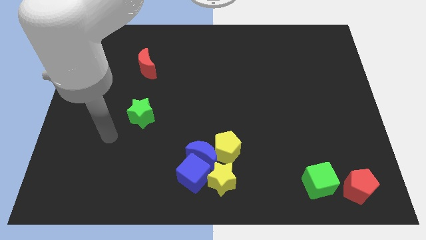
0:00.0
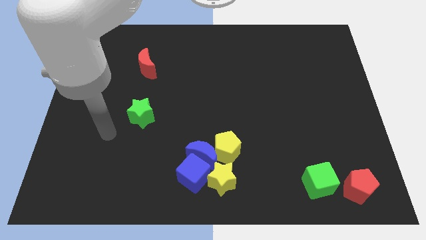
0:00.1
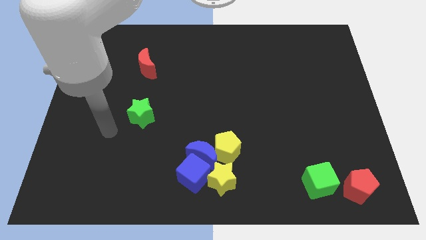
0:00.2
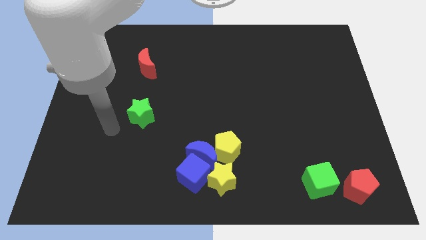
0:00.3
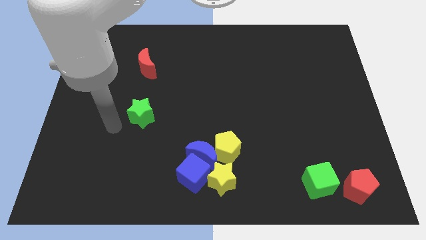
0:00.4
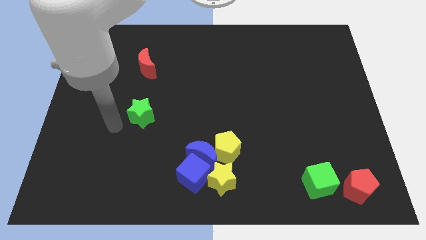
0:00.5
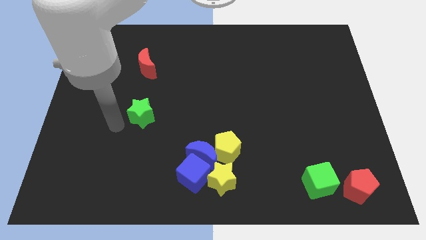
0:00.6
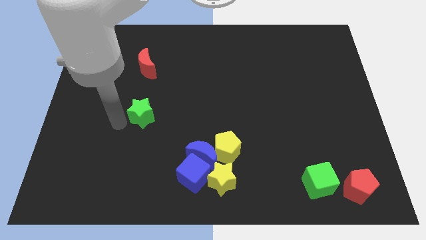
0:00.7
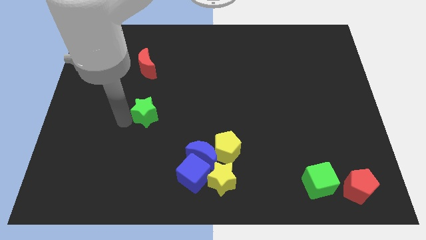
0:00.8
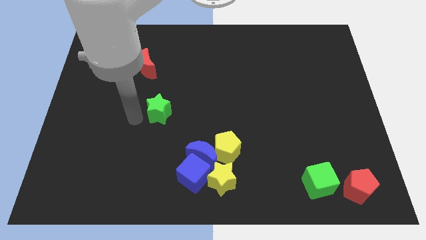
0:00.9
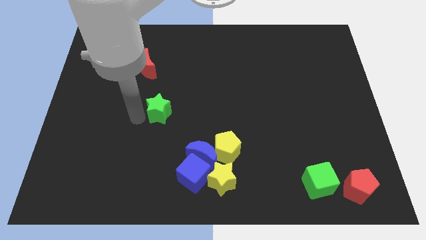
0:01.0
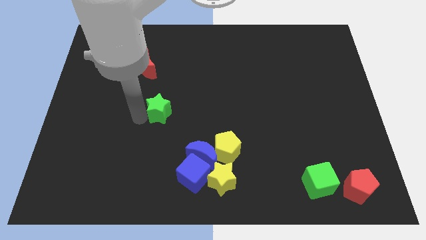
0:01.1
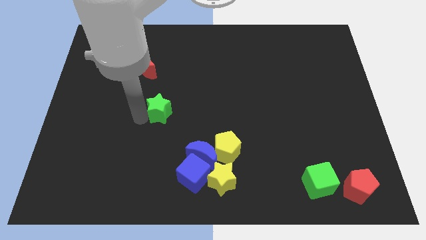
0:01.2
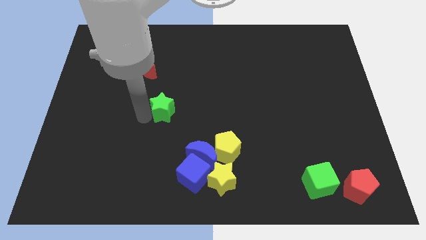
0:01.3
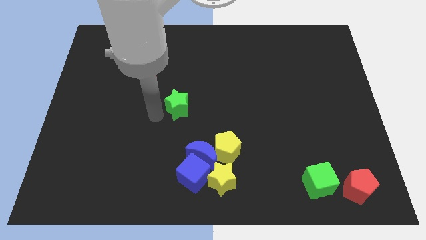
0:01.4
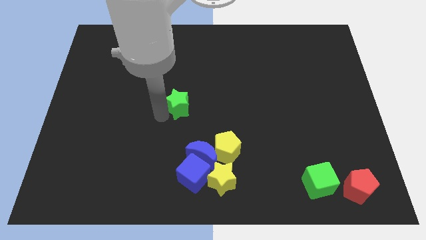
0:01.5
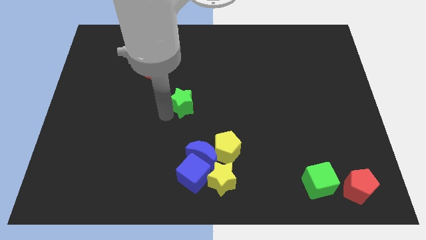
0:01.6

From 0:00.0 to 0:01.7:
push the green star slightly to the right

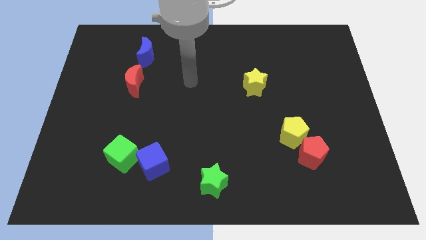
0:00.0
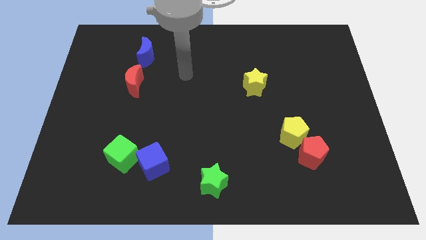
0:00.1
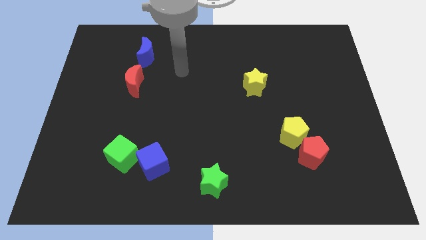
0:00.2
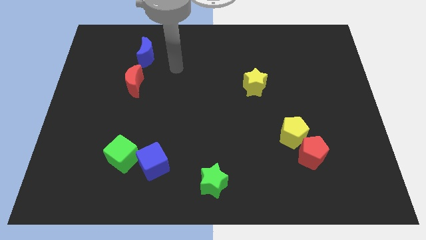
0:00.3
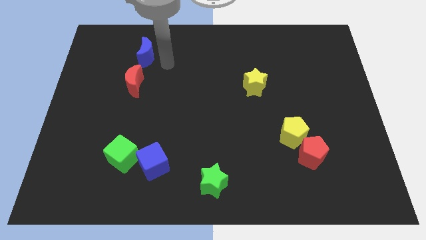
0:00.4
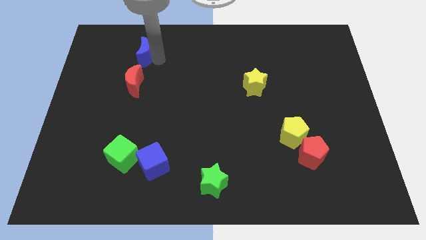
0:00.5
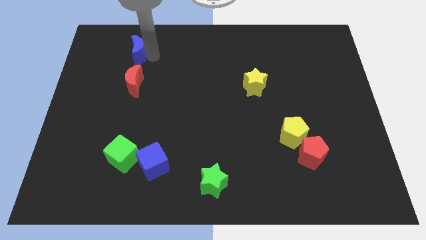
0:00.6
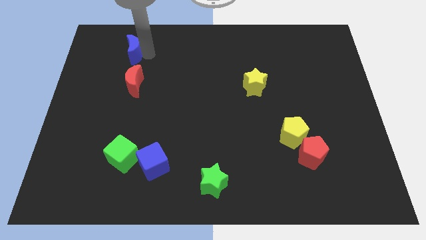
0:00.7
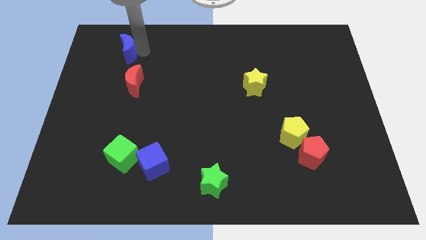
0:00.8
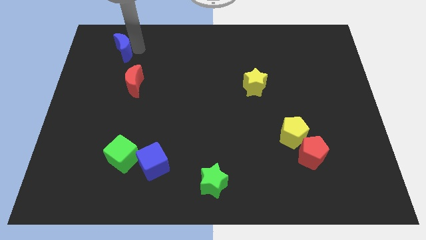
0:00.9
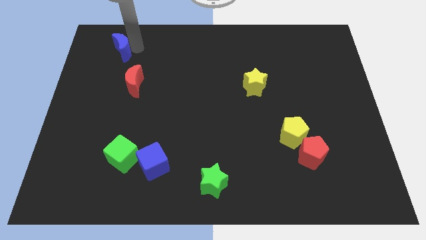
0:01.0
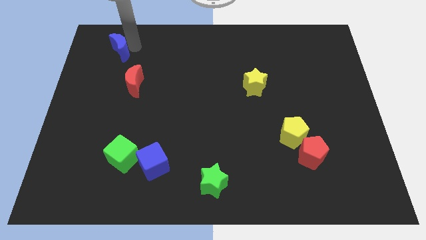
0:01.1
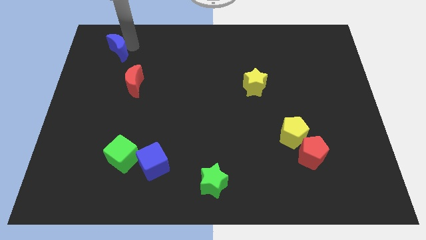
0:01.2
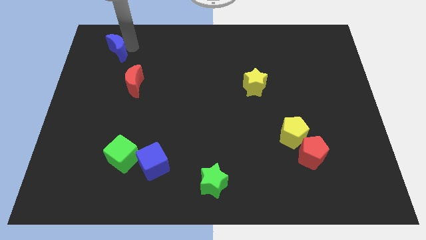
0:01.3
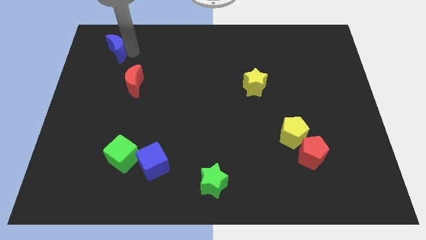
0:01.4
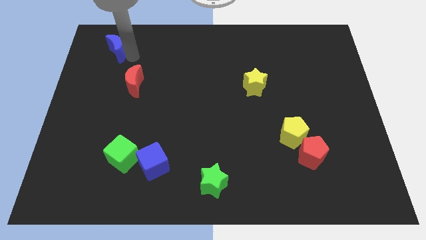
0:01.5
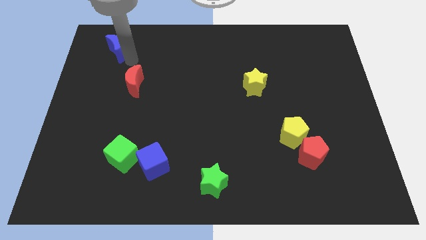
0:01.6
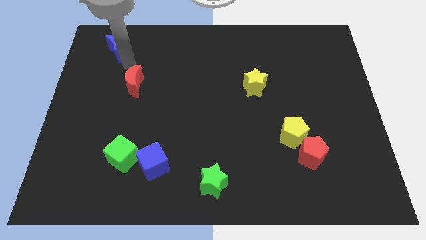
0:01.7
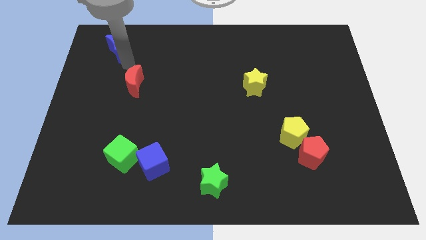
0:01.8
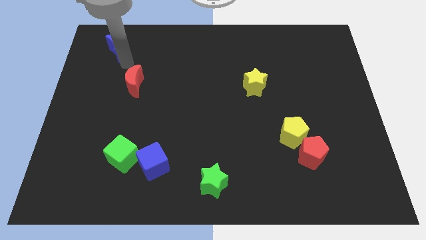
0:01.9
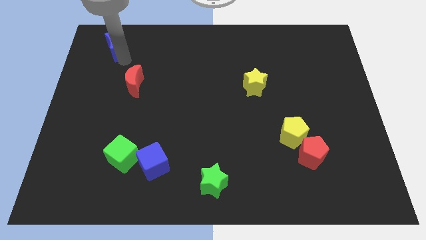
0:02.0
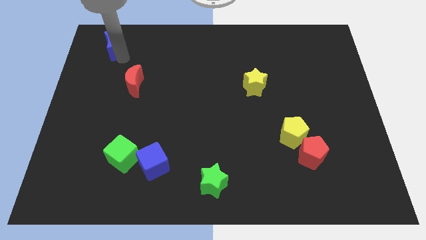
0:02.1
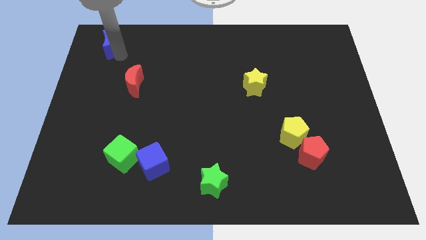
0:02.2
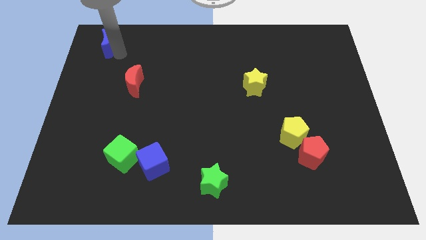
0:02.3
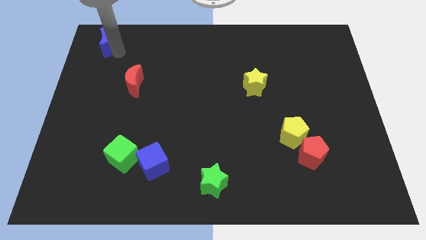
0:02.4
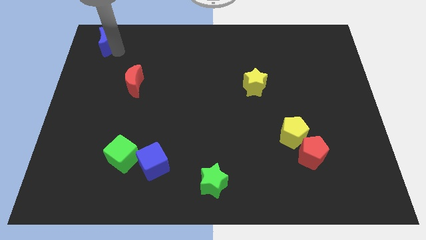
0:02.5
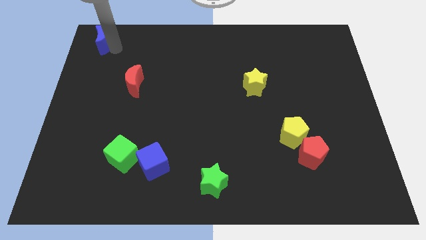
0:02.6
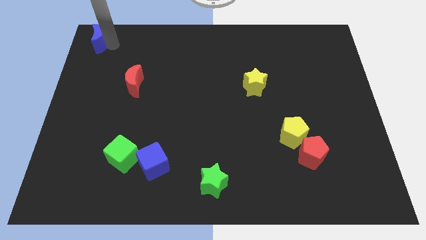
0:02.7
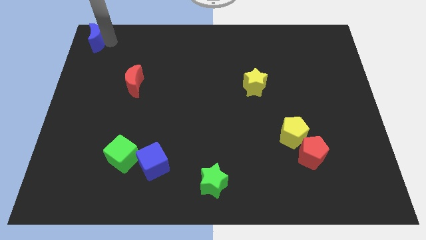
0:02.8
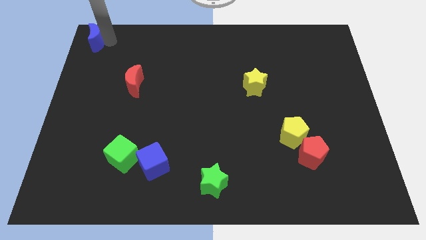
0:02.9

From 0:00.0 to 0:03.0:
move blue cube at top left corner

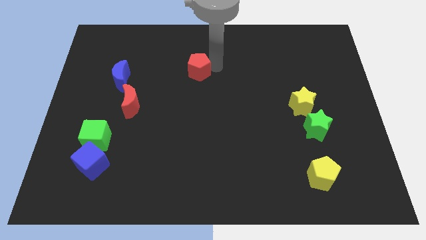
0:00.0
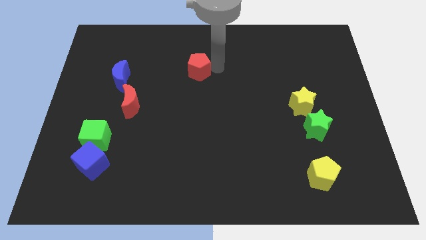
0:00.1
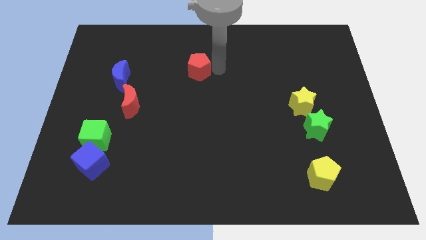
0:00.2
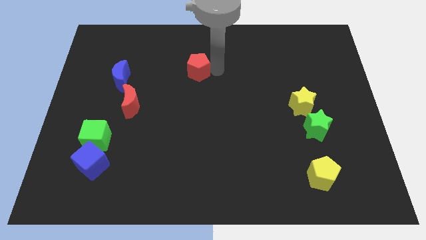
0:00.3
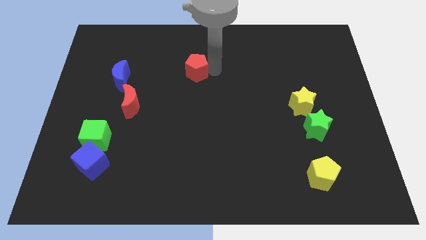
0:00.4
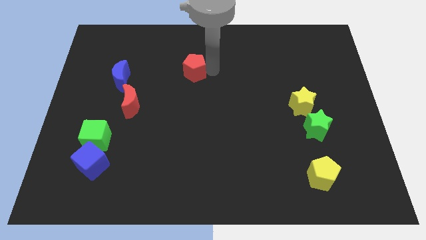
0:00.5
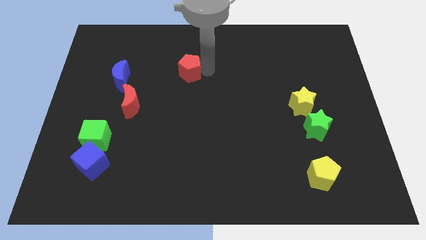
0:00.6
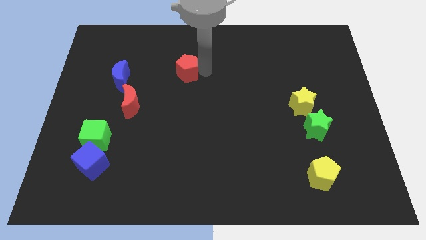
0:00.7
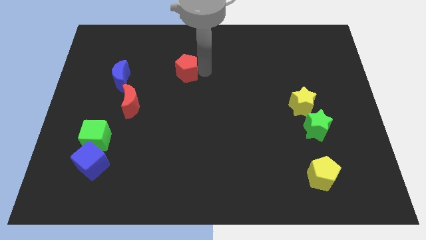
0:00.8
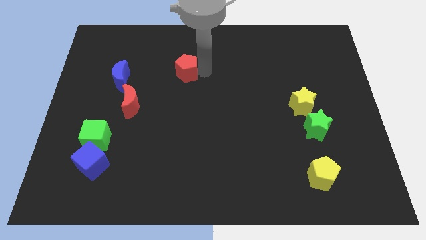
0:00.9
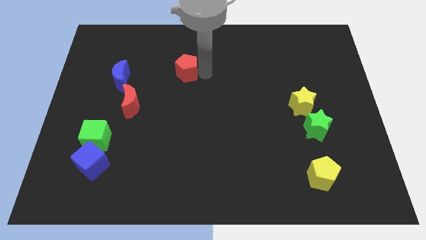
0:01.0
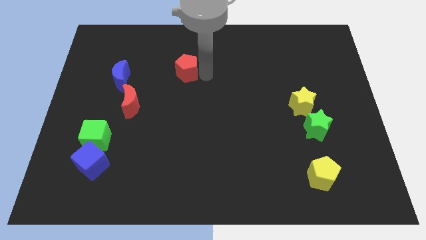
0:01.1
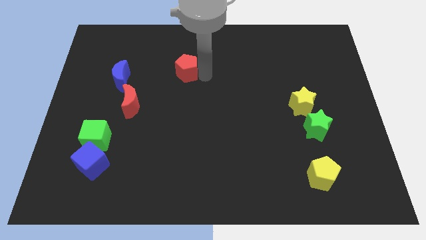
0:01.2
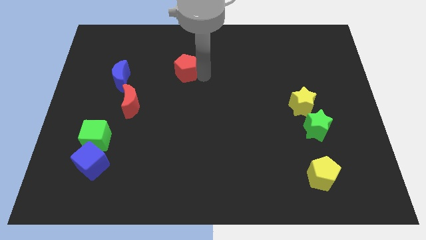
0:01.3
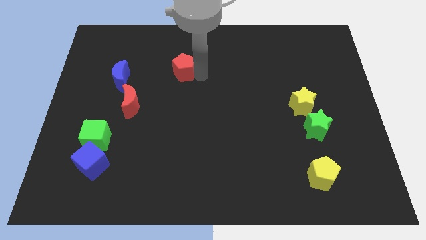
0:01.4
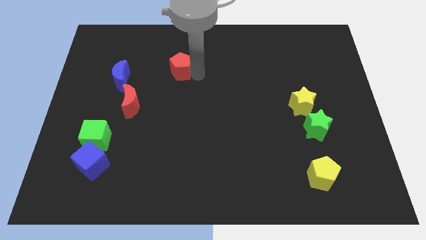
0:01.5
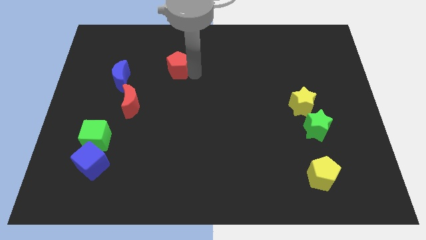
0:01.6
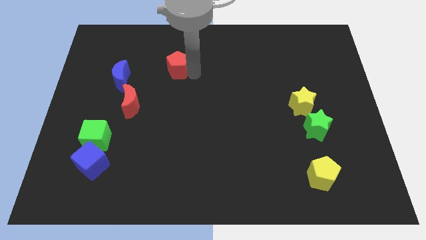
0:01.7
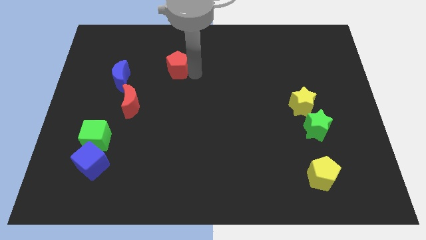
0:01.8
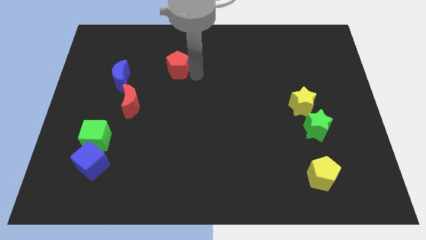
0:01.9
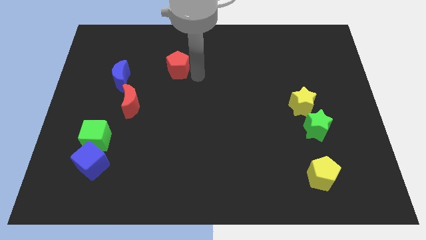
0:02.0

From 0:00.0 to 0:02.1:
push red pentagon to the right of the blue moon

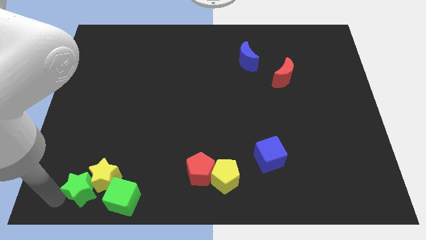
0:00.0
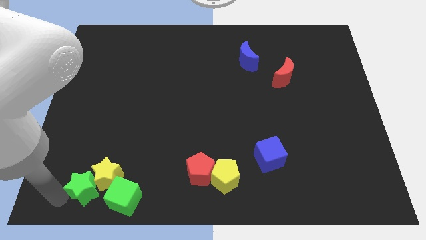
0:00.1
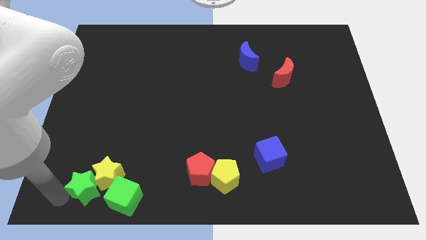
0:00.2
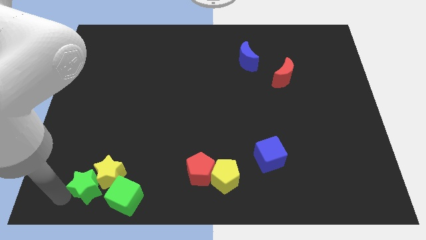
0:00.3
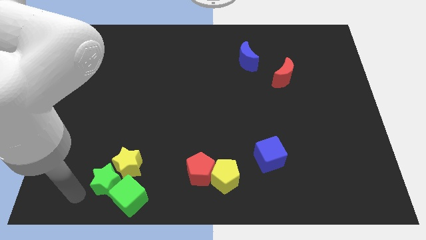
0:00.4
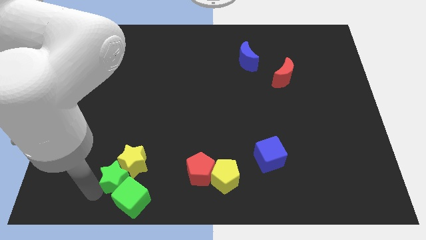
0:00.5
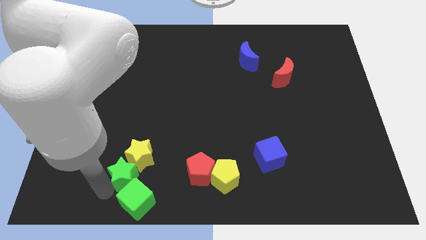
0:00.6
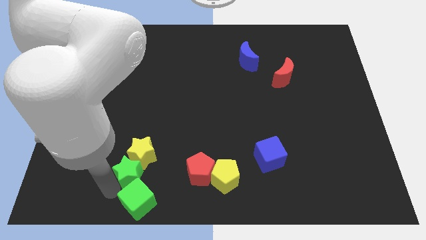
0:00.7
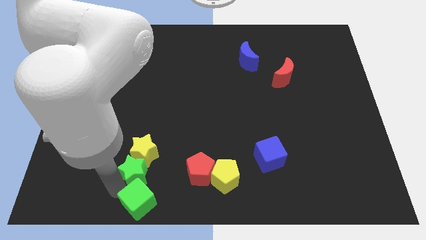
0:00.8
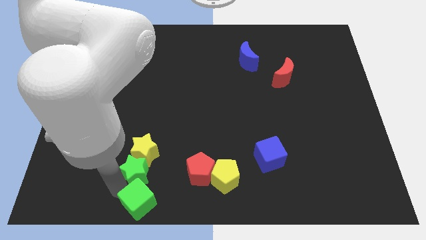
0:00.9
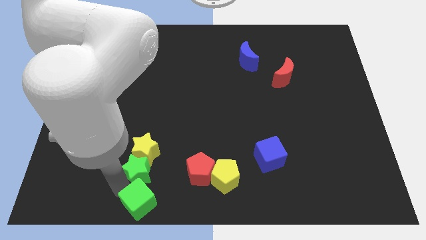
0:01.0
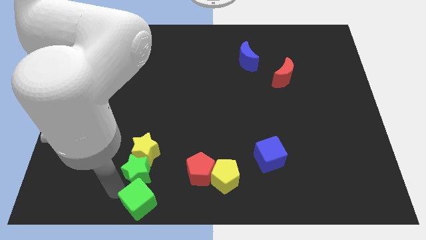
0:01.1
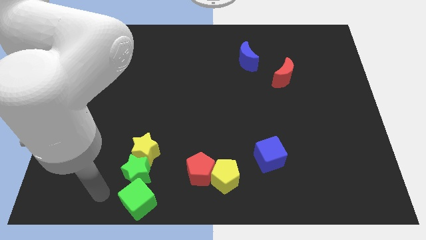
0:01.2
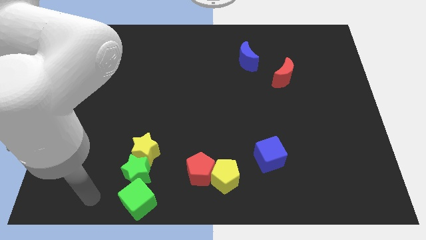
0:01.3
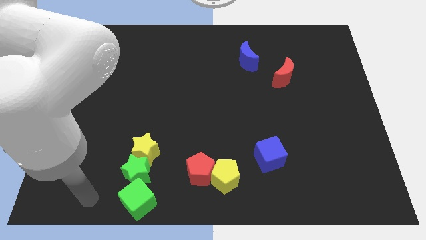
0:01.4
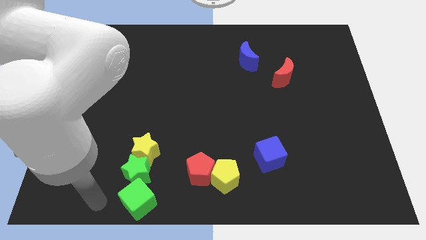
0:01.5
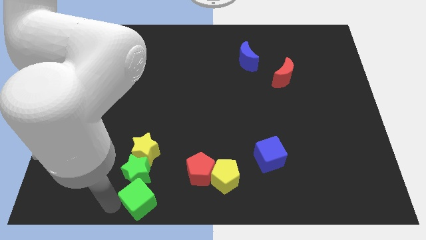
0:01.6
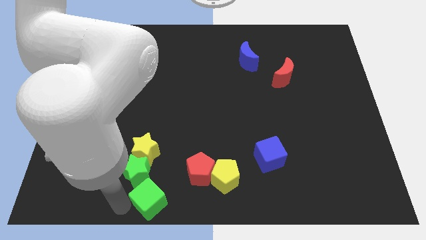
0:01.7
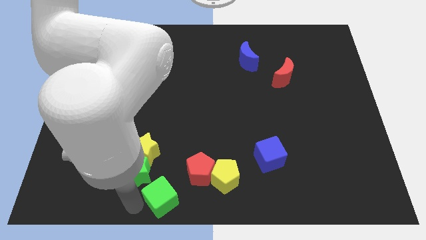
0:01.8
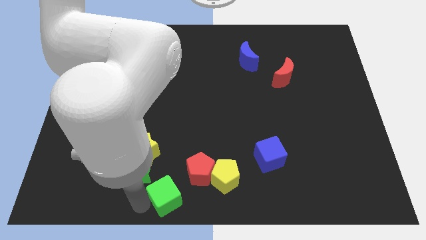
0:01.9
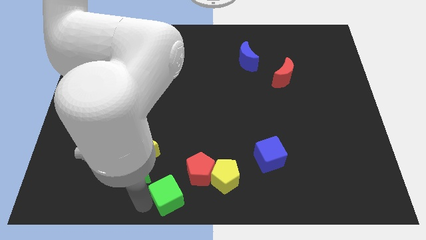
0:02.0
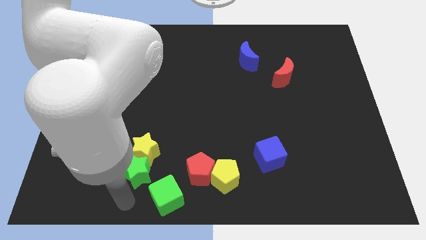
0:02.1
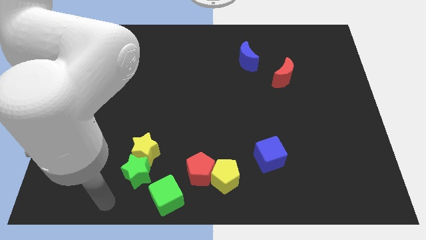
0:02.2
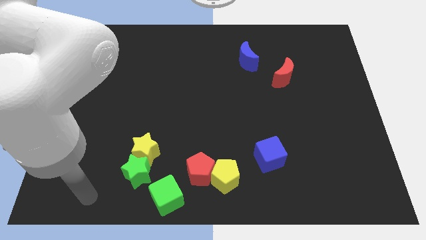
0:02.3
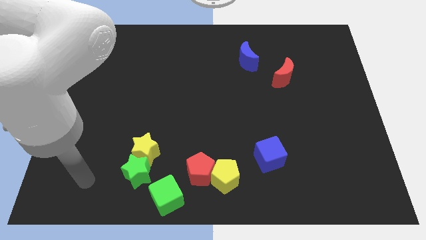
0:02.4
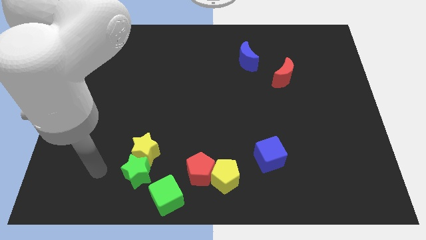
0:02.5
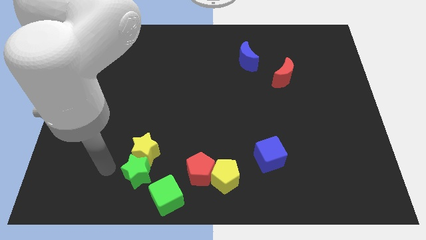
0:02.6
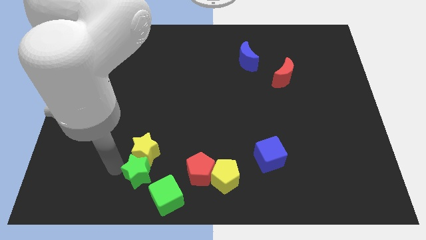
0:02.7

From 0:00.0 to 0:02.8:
separate green cube from the green star
